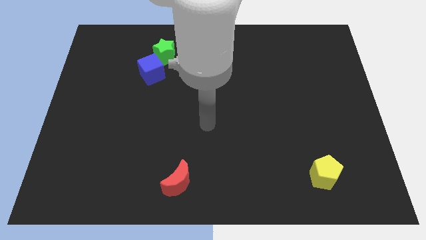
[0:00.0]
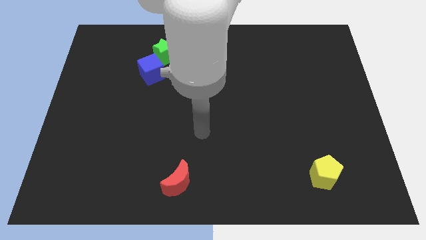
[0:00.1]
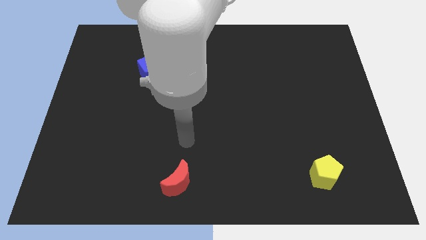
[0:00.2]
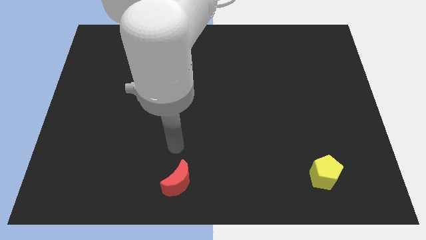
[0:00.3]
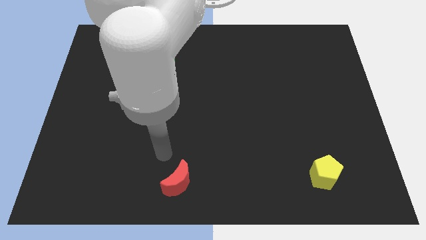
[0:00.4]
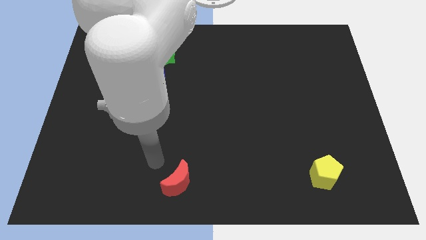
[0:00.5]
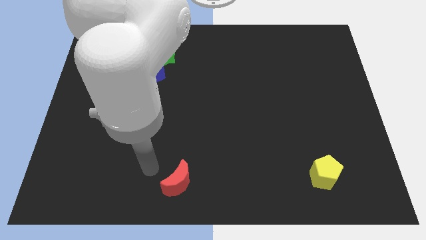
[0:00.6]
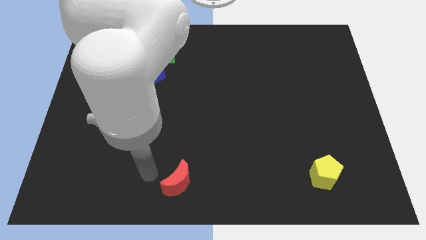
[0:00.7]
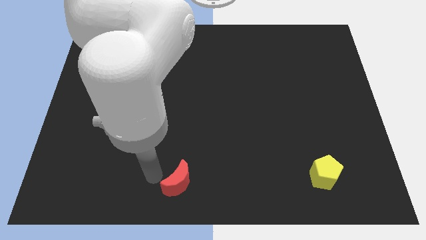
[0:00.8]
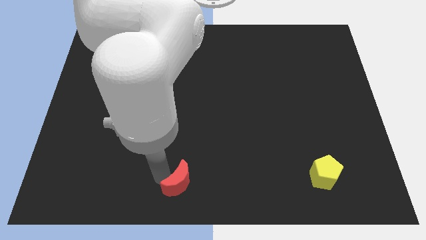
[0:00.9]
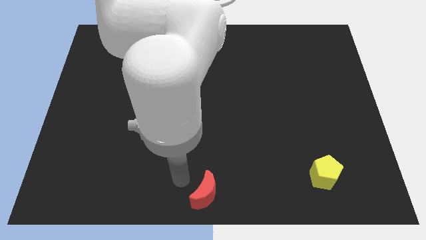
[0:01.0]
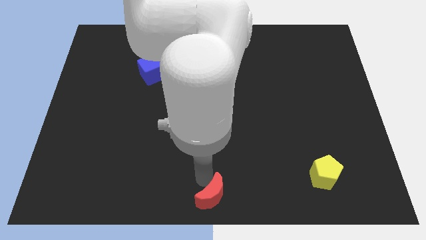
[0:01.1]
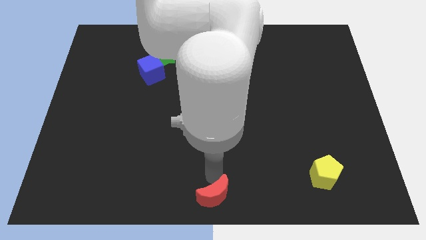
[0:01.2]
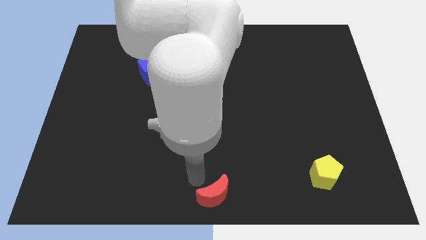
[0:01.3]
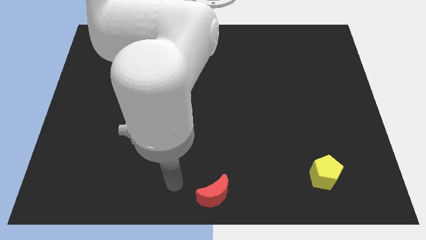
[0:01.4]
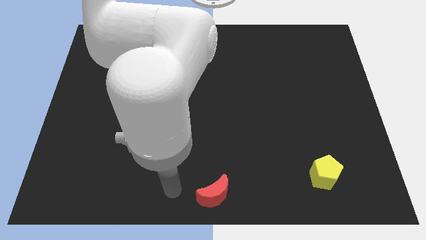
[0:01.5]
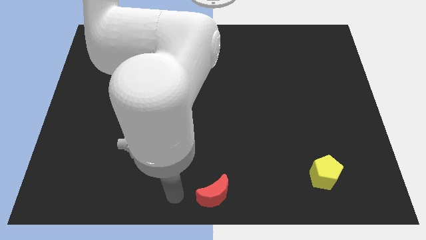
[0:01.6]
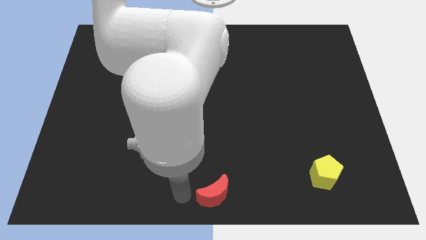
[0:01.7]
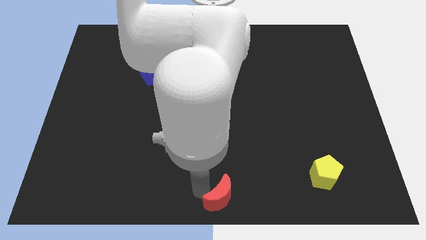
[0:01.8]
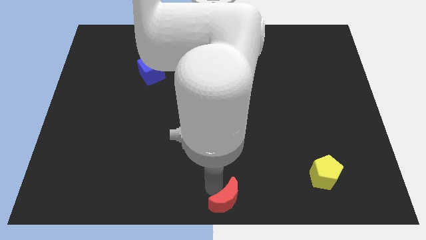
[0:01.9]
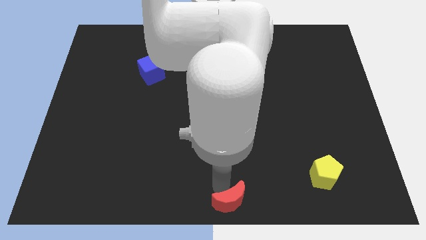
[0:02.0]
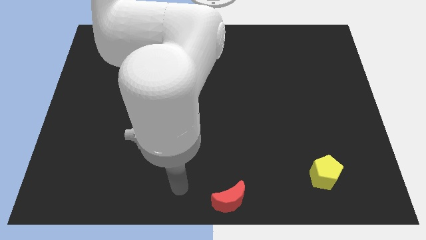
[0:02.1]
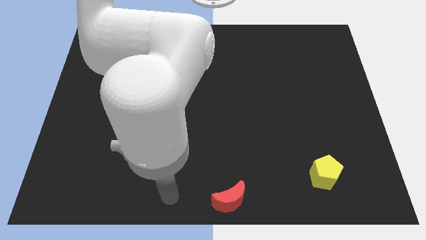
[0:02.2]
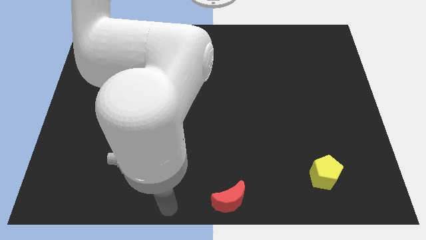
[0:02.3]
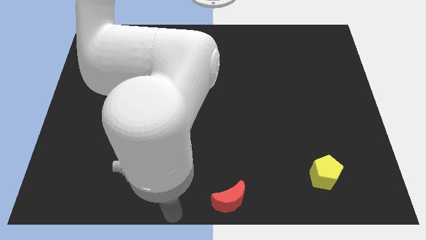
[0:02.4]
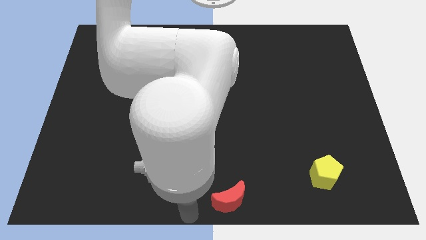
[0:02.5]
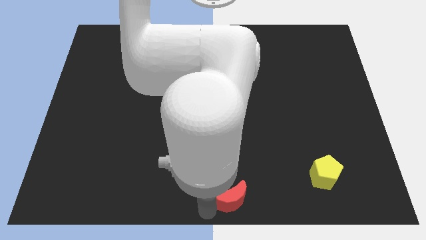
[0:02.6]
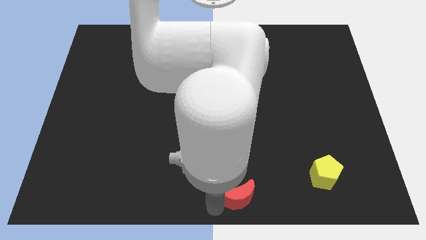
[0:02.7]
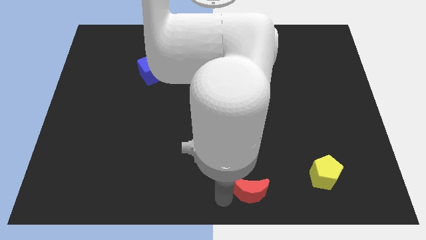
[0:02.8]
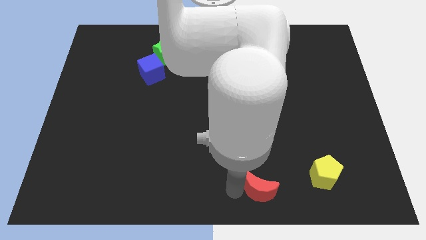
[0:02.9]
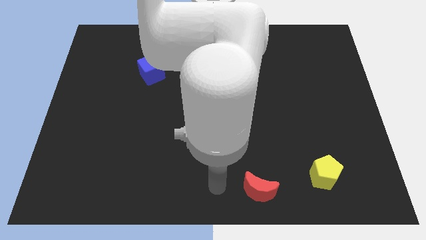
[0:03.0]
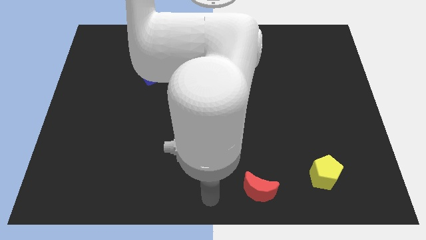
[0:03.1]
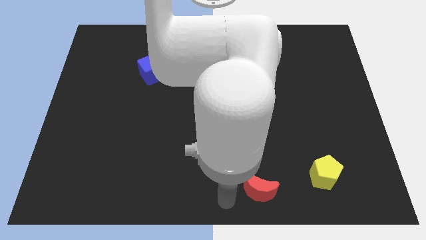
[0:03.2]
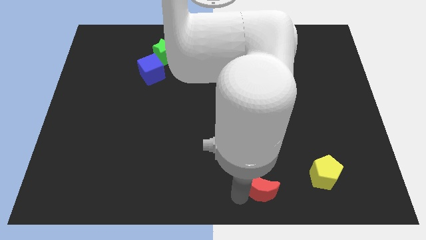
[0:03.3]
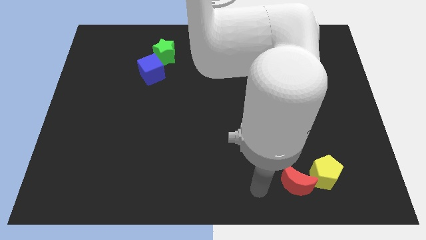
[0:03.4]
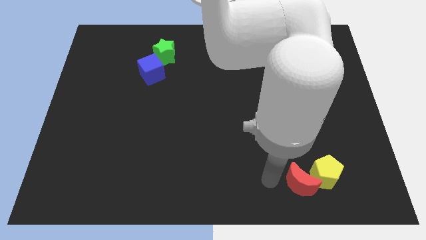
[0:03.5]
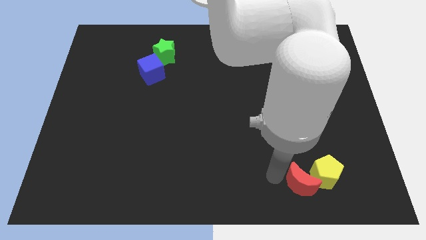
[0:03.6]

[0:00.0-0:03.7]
put the moon close to the yellow block

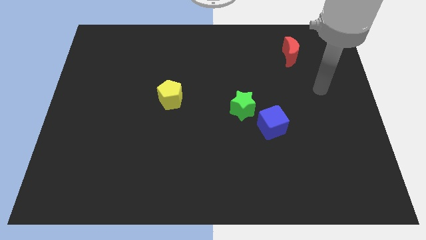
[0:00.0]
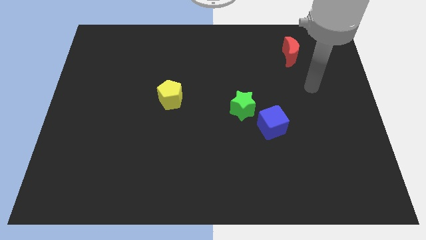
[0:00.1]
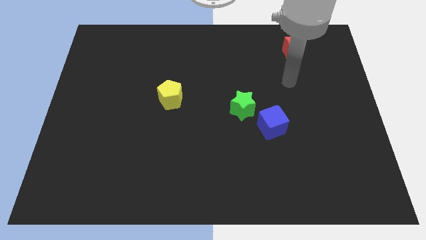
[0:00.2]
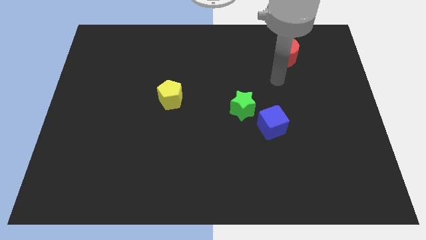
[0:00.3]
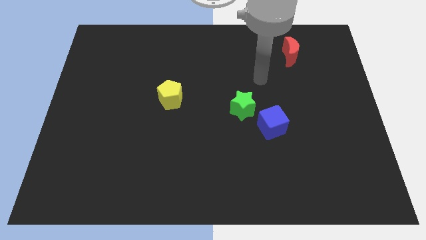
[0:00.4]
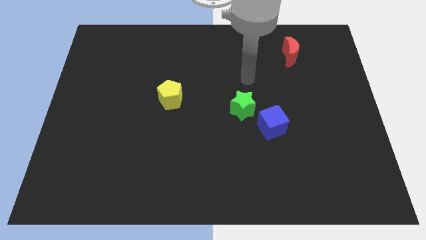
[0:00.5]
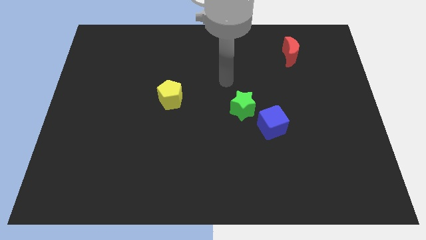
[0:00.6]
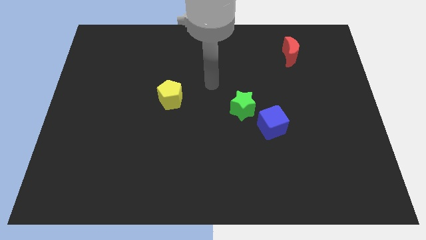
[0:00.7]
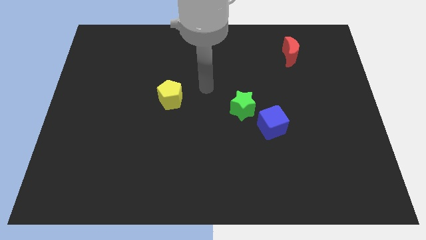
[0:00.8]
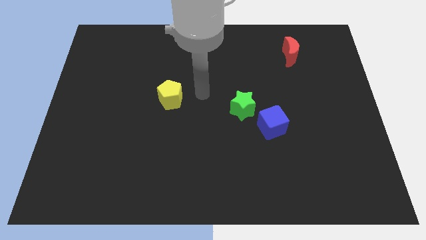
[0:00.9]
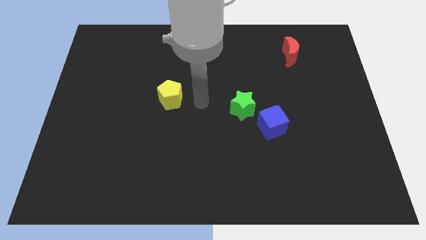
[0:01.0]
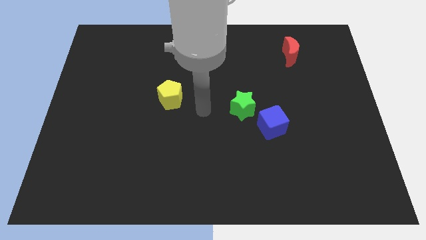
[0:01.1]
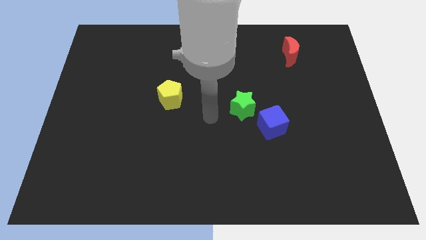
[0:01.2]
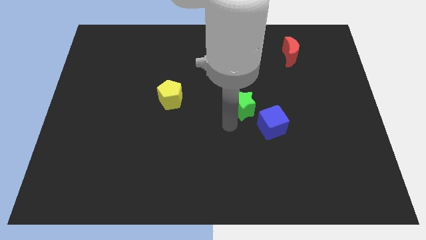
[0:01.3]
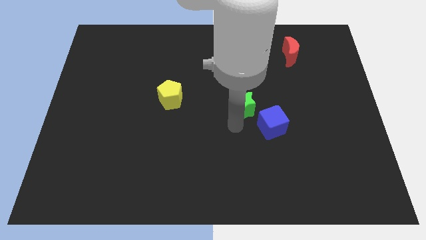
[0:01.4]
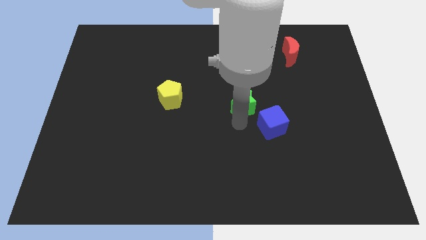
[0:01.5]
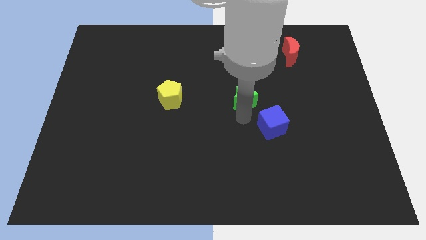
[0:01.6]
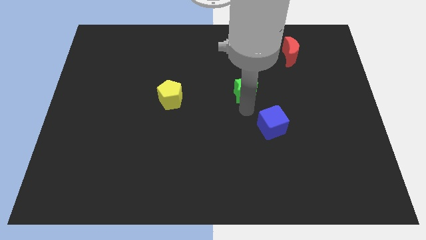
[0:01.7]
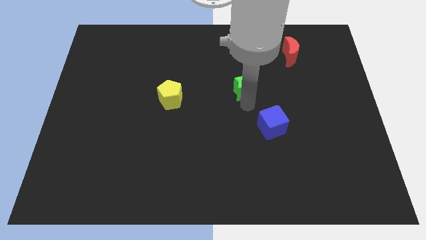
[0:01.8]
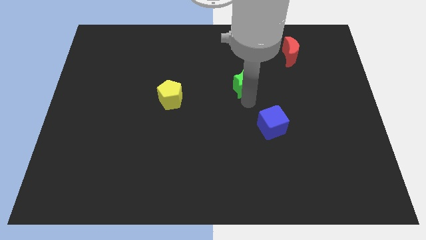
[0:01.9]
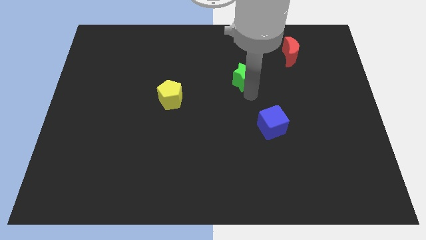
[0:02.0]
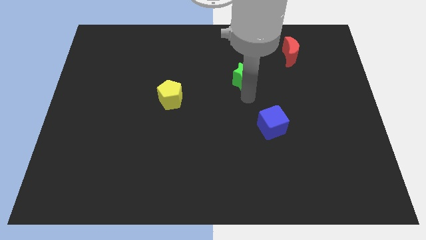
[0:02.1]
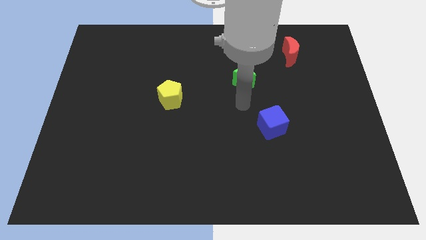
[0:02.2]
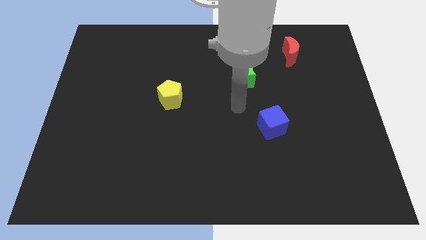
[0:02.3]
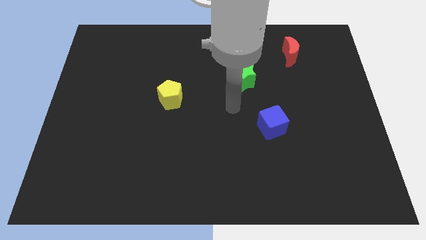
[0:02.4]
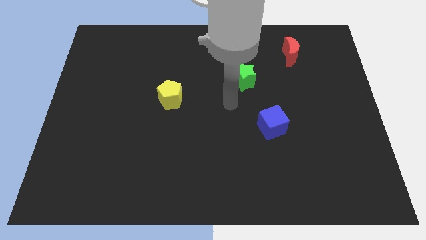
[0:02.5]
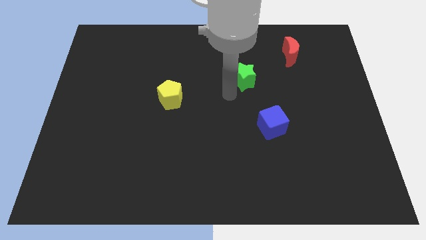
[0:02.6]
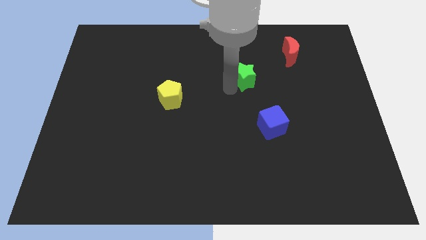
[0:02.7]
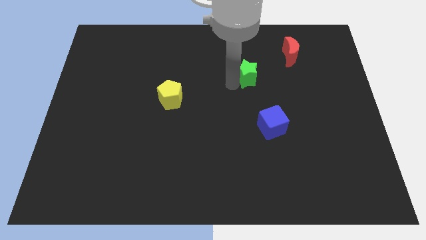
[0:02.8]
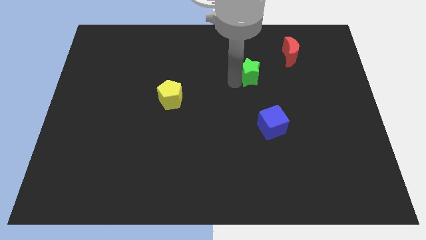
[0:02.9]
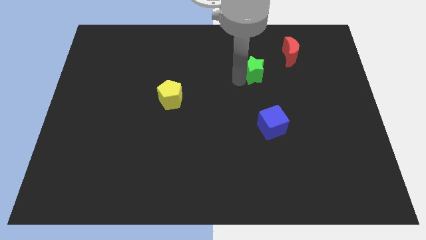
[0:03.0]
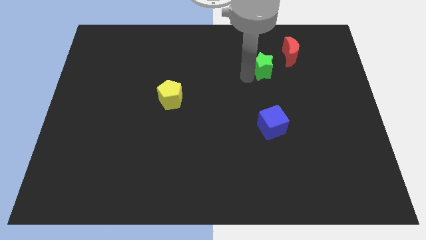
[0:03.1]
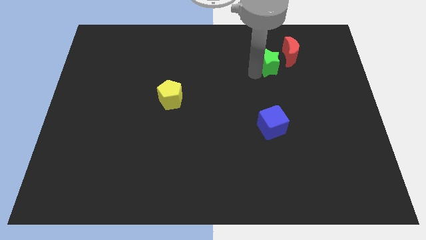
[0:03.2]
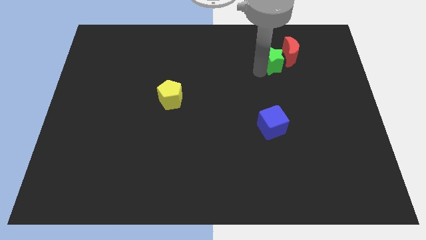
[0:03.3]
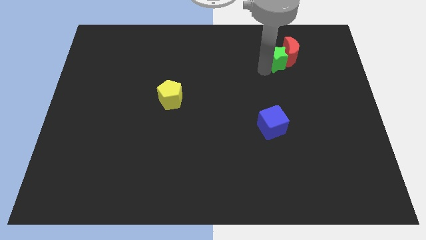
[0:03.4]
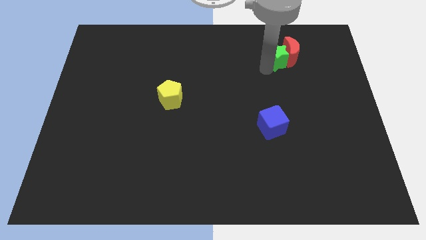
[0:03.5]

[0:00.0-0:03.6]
slide the green star close to the moon

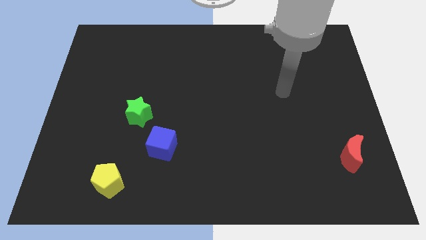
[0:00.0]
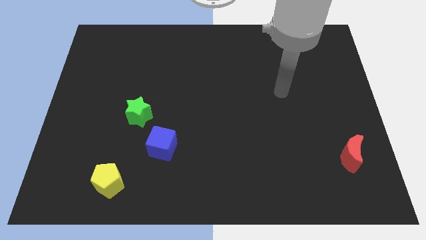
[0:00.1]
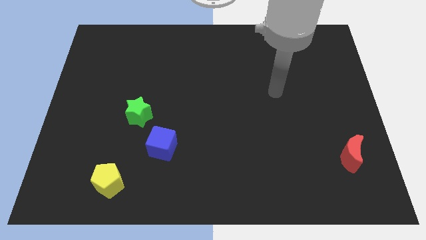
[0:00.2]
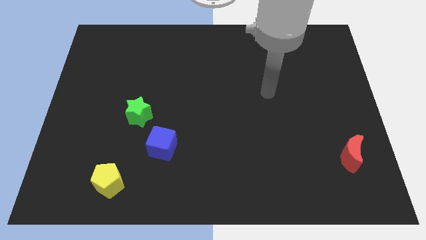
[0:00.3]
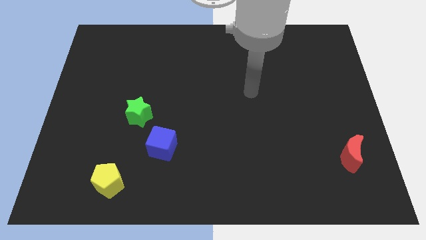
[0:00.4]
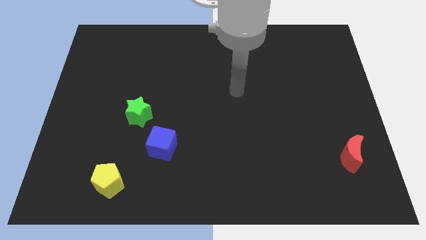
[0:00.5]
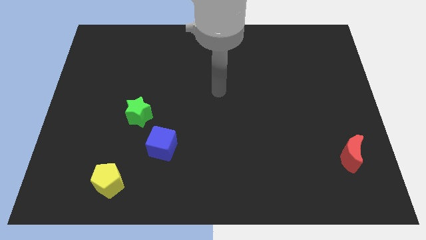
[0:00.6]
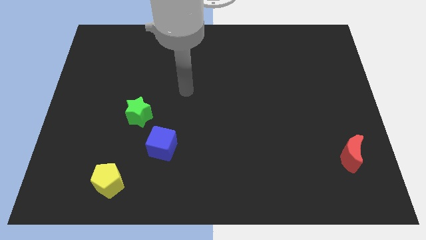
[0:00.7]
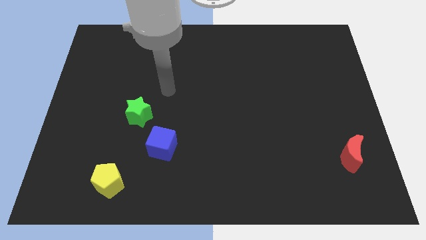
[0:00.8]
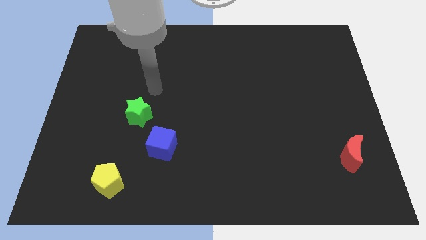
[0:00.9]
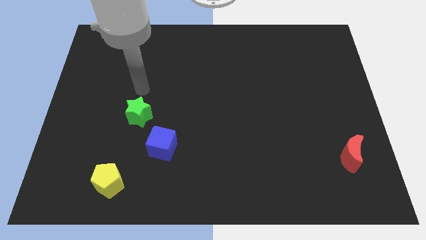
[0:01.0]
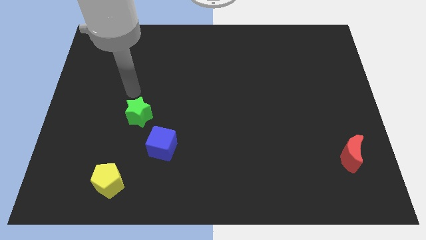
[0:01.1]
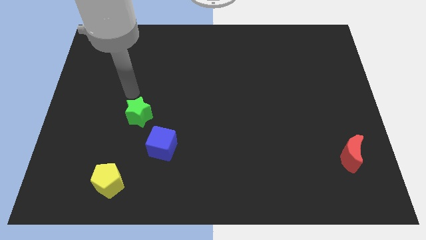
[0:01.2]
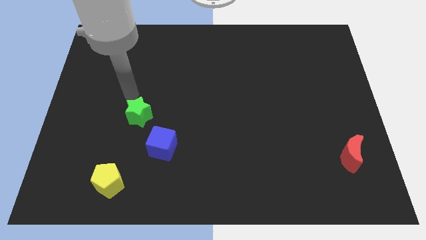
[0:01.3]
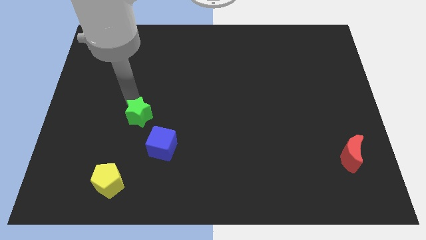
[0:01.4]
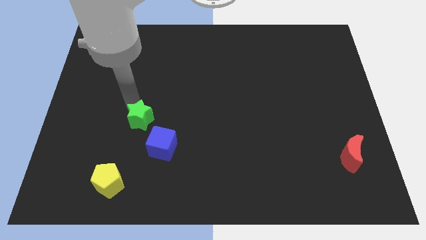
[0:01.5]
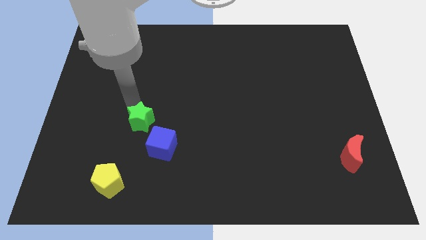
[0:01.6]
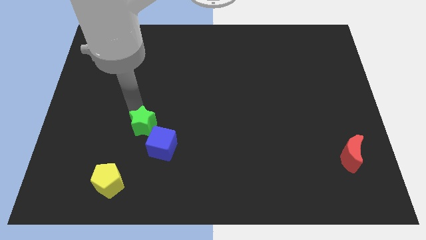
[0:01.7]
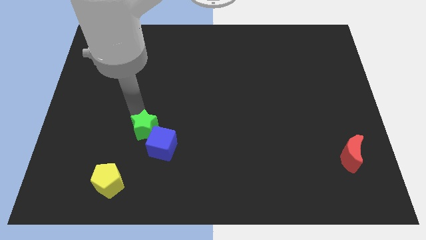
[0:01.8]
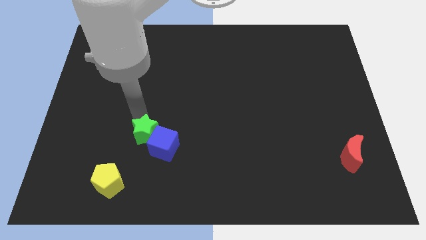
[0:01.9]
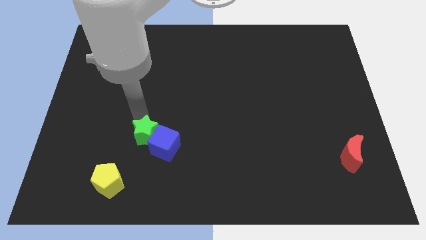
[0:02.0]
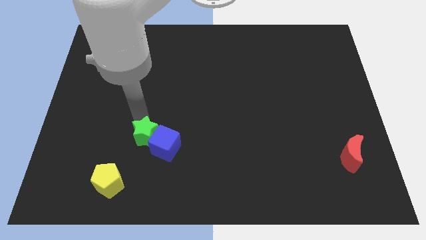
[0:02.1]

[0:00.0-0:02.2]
put the green star next to the cube
